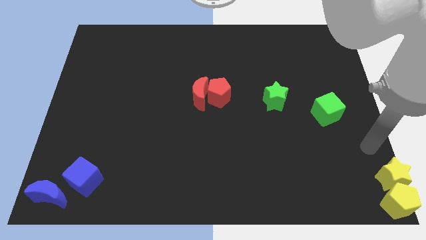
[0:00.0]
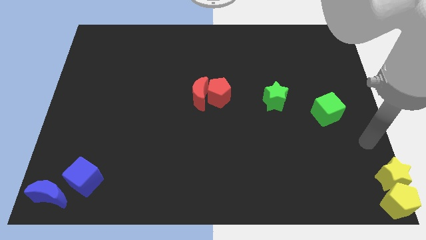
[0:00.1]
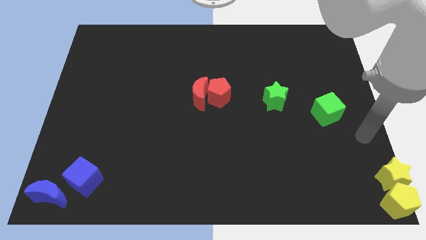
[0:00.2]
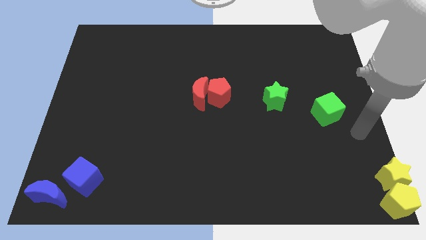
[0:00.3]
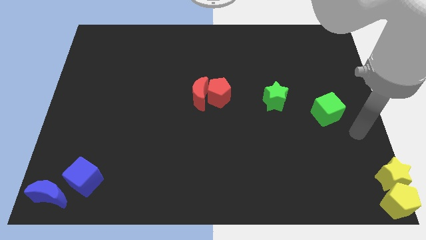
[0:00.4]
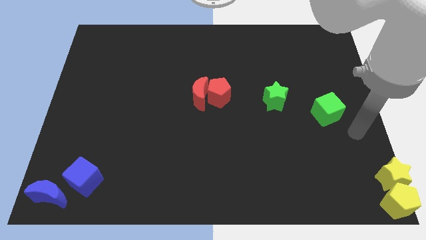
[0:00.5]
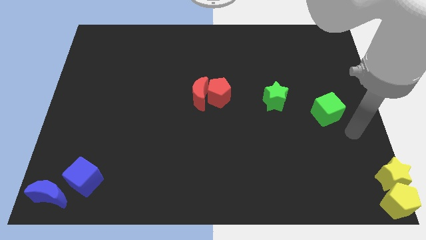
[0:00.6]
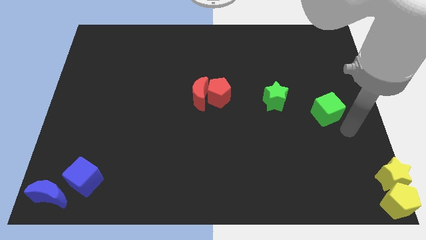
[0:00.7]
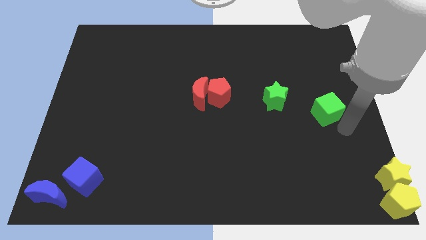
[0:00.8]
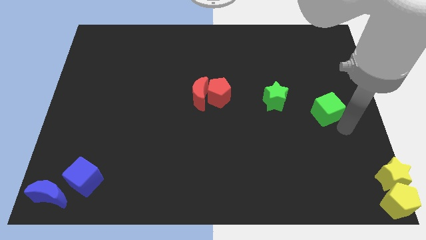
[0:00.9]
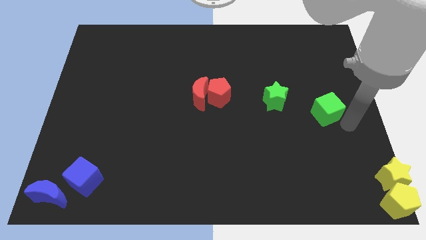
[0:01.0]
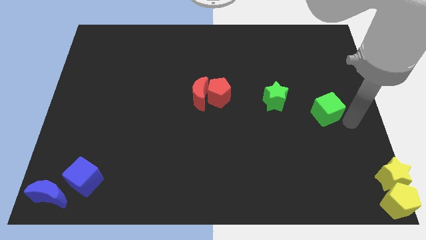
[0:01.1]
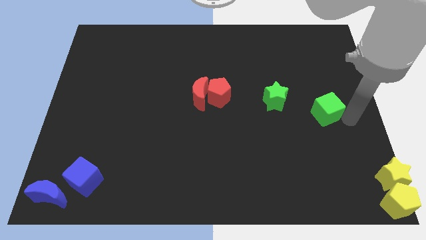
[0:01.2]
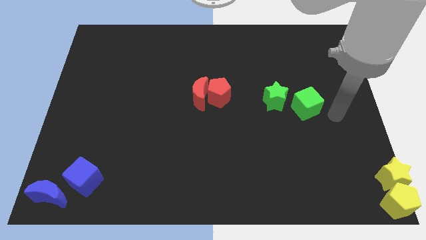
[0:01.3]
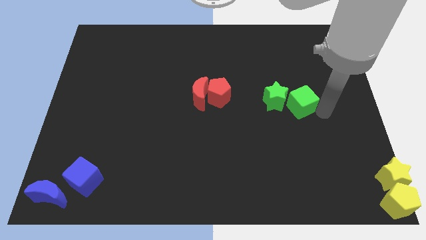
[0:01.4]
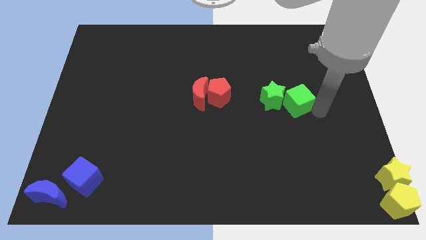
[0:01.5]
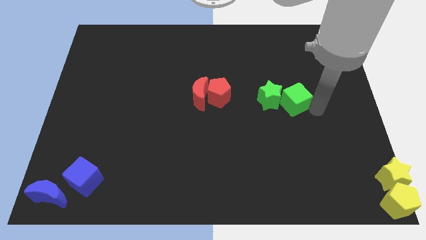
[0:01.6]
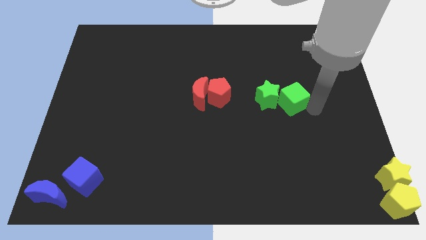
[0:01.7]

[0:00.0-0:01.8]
put green blocks together right beside the red blocks

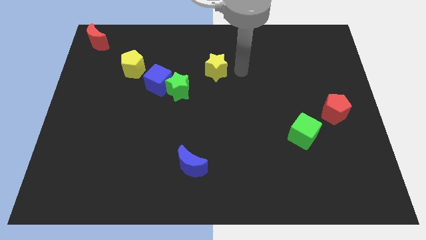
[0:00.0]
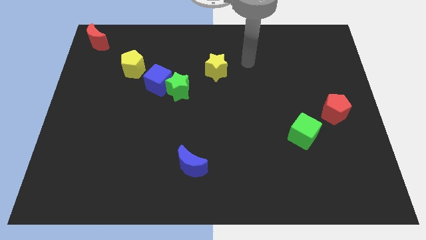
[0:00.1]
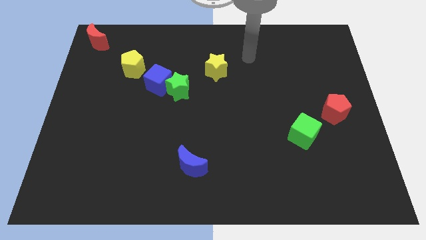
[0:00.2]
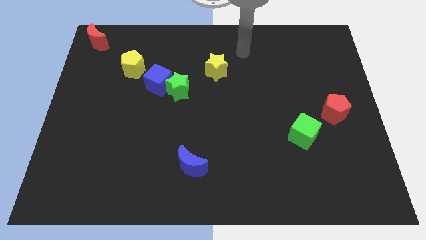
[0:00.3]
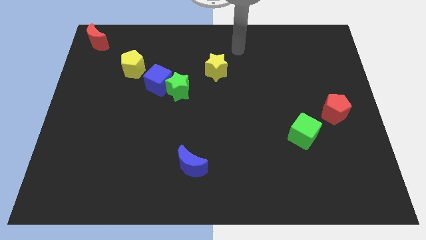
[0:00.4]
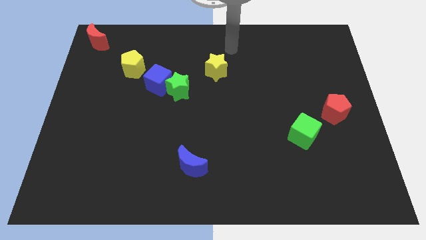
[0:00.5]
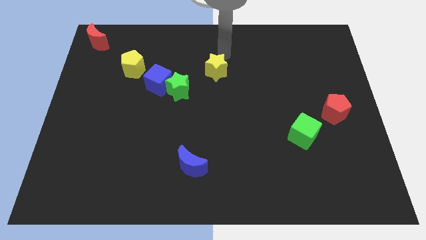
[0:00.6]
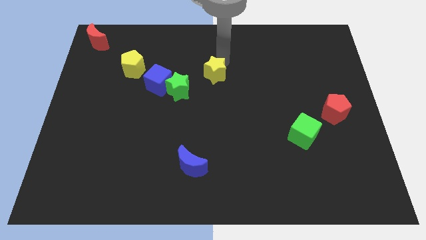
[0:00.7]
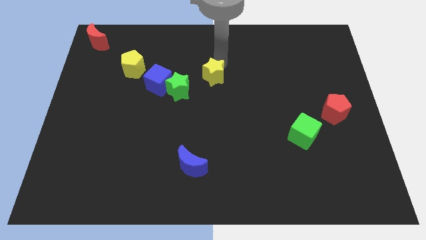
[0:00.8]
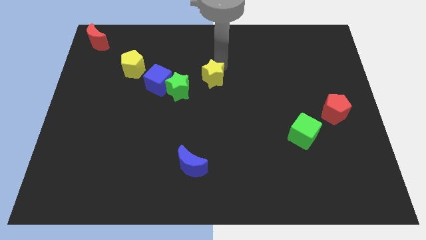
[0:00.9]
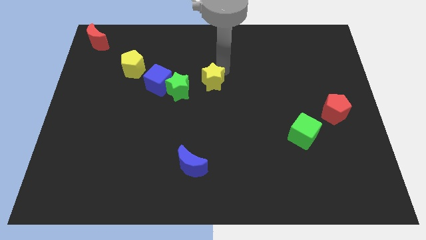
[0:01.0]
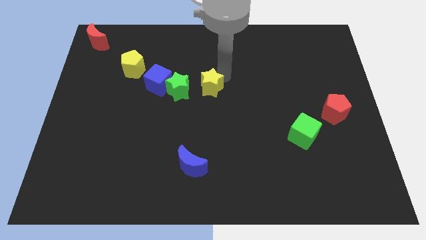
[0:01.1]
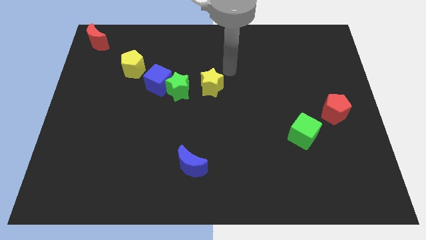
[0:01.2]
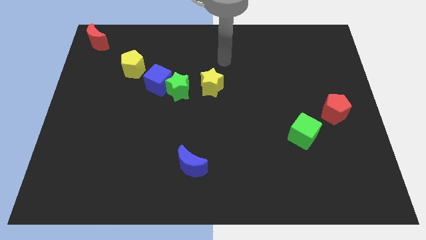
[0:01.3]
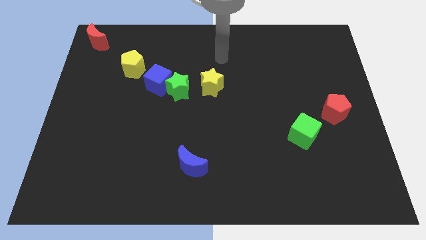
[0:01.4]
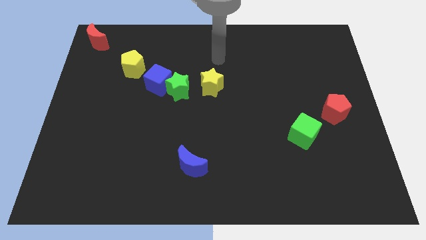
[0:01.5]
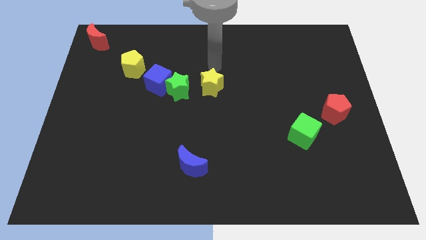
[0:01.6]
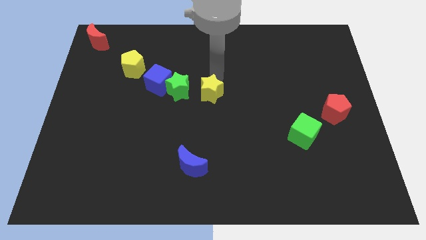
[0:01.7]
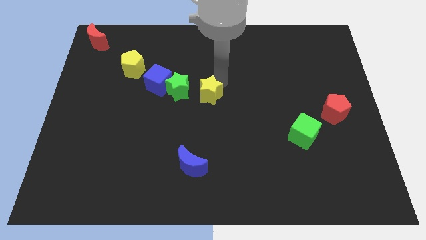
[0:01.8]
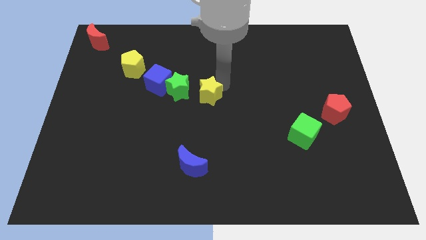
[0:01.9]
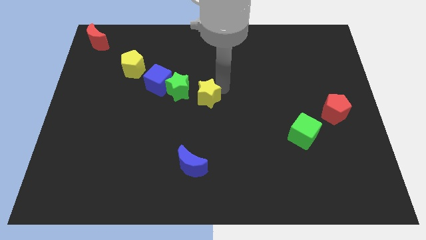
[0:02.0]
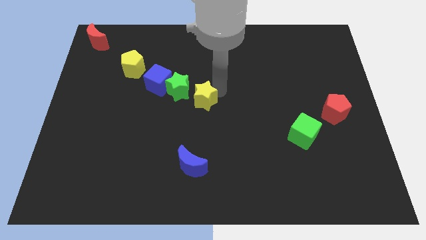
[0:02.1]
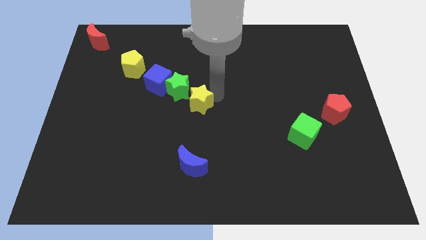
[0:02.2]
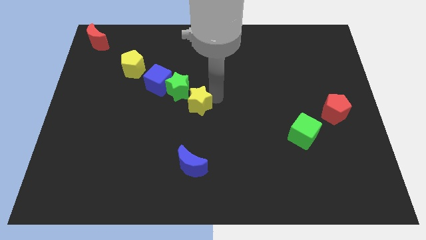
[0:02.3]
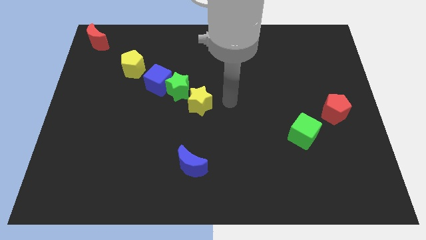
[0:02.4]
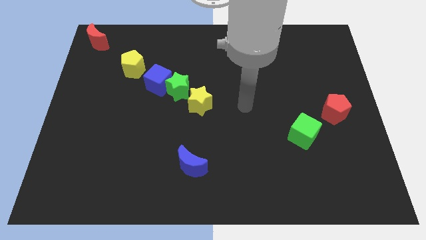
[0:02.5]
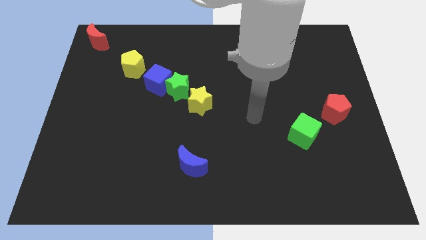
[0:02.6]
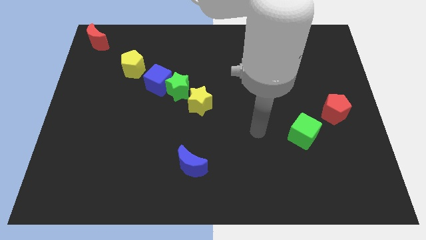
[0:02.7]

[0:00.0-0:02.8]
push the green star to the bottom of the yellow star

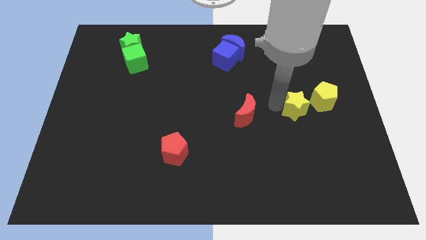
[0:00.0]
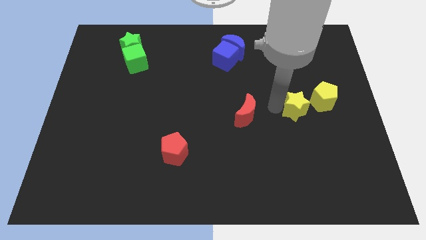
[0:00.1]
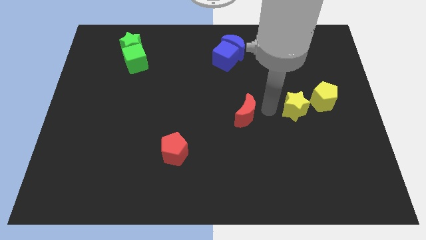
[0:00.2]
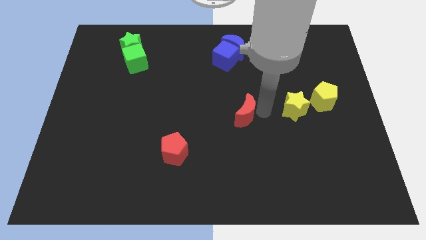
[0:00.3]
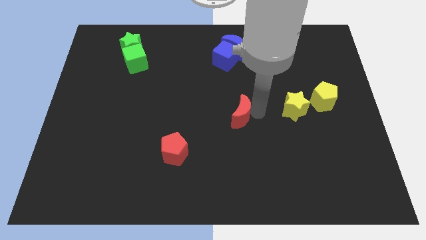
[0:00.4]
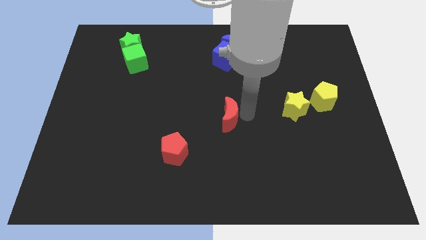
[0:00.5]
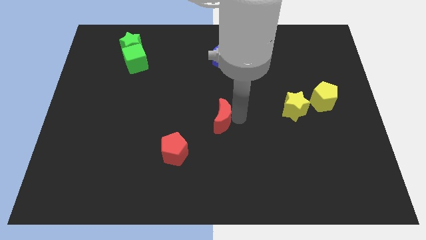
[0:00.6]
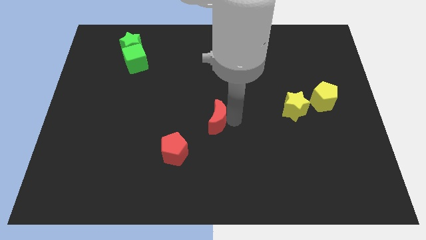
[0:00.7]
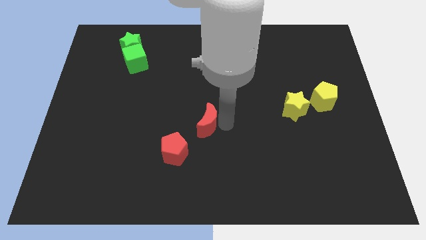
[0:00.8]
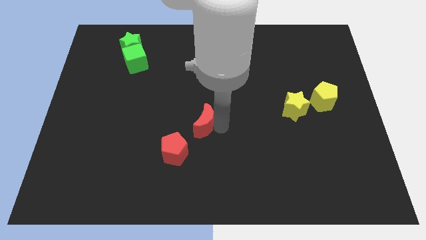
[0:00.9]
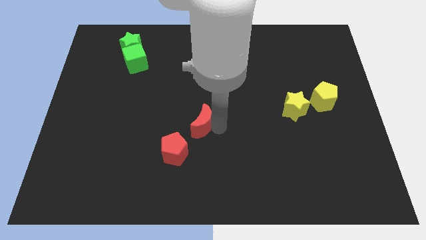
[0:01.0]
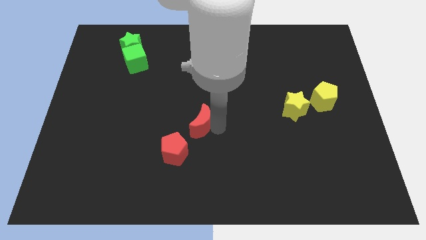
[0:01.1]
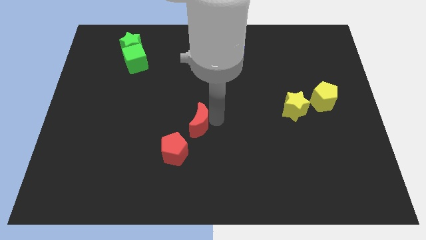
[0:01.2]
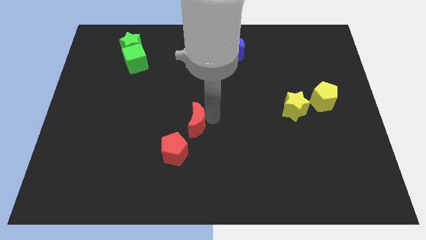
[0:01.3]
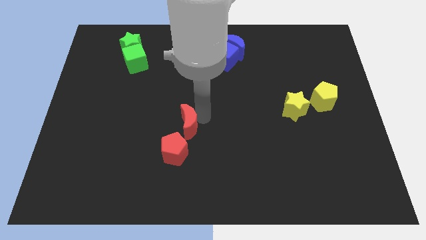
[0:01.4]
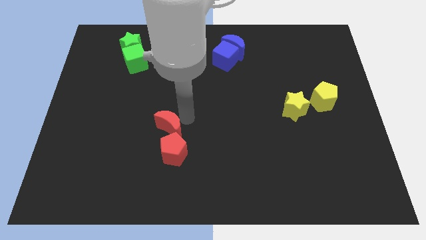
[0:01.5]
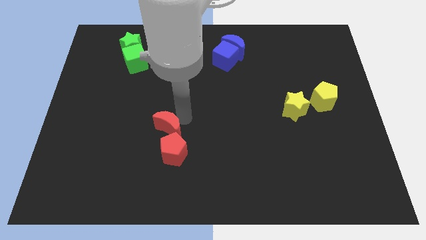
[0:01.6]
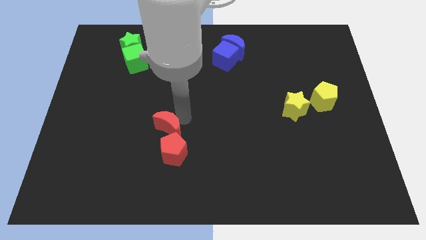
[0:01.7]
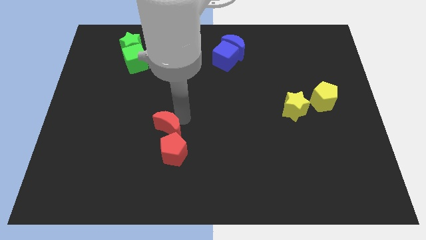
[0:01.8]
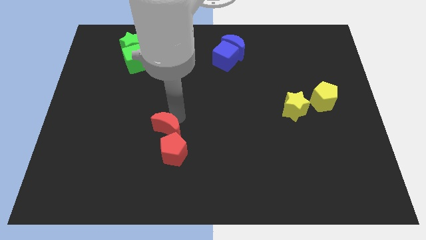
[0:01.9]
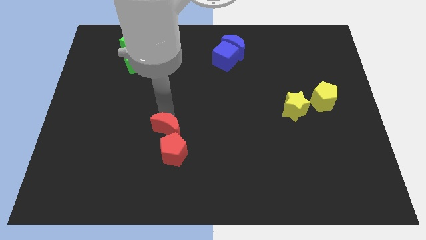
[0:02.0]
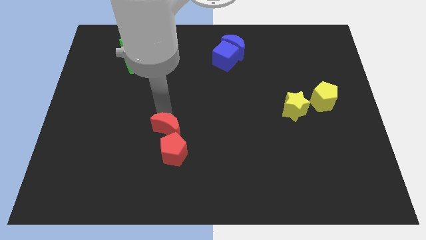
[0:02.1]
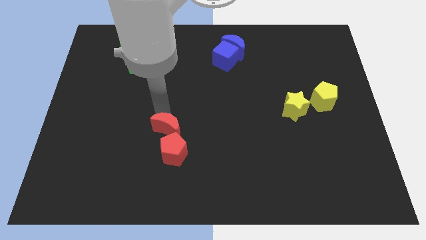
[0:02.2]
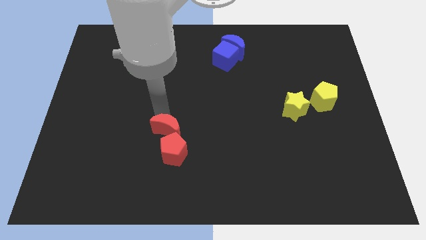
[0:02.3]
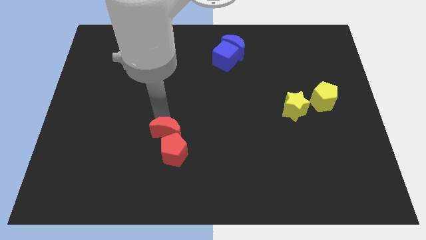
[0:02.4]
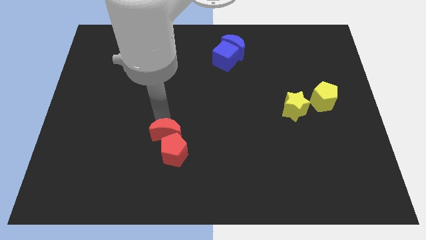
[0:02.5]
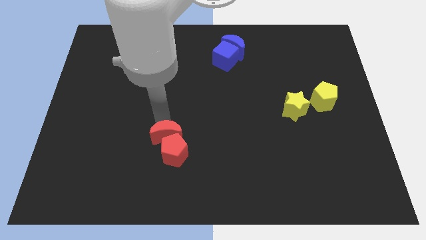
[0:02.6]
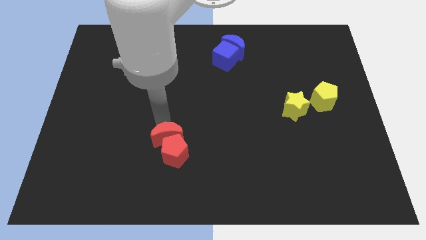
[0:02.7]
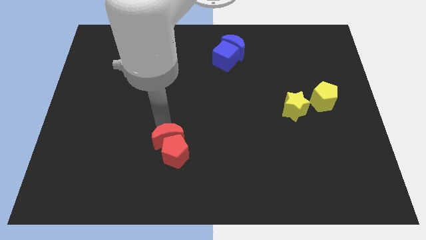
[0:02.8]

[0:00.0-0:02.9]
push red crescent above red pentagon

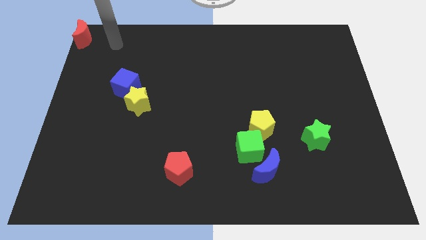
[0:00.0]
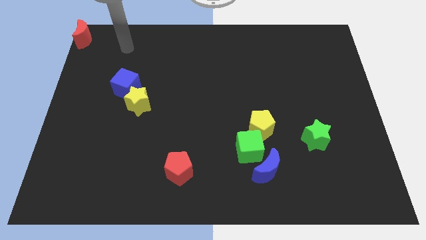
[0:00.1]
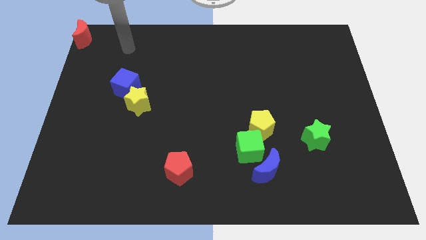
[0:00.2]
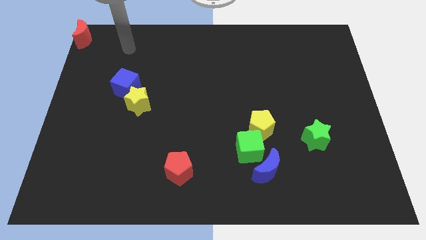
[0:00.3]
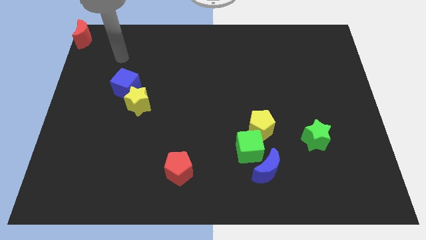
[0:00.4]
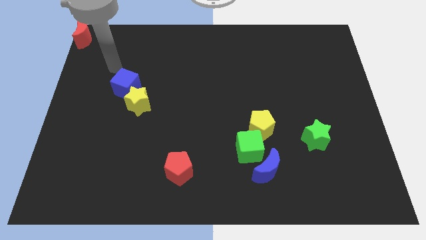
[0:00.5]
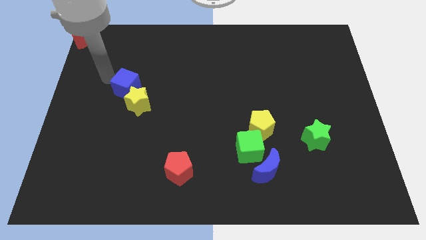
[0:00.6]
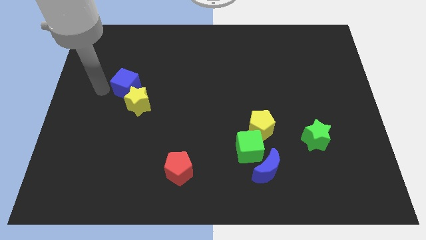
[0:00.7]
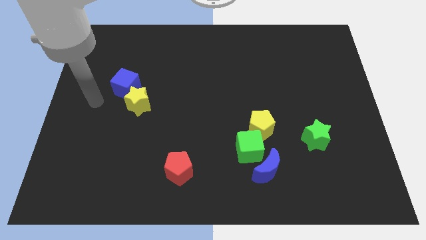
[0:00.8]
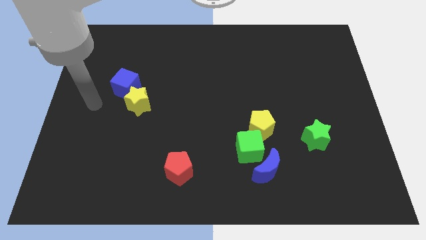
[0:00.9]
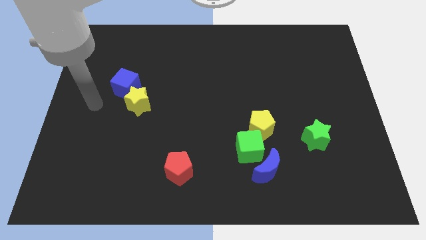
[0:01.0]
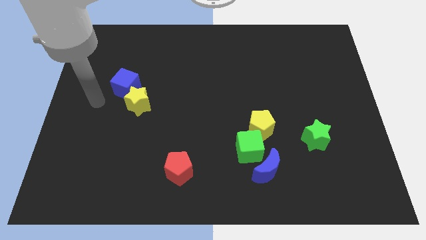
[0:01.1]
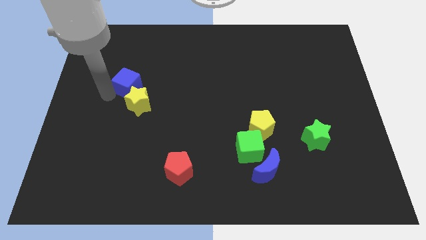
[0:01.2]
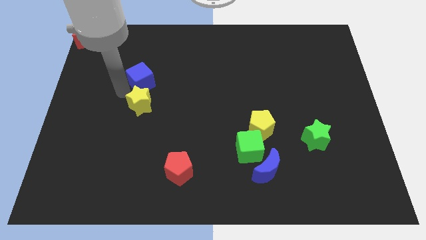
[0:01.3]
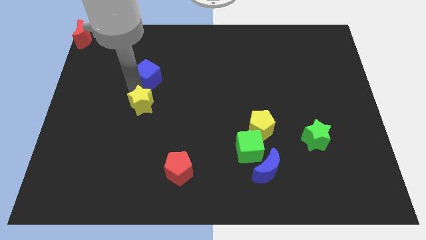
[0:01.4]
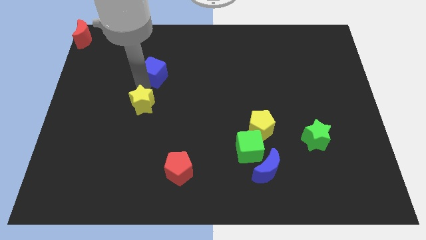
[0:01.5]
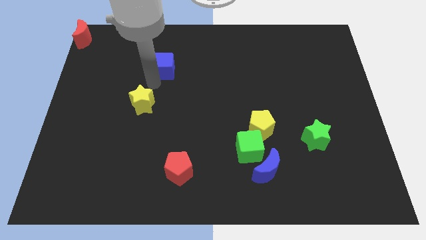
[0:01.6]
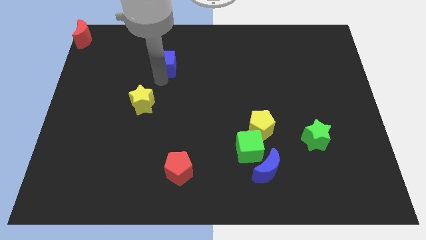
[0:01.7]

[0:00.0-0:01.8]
slightly move the blue cube upwards
